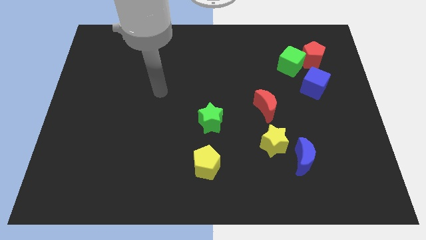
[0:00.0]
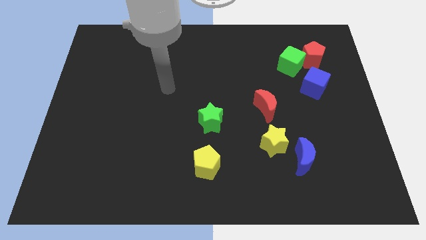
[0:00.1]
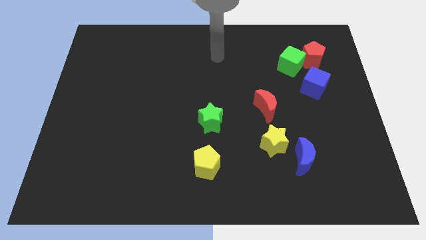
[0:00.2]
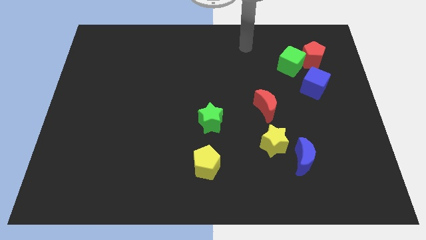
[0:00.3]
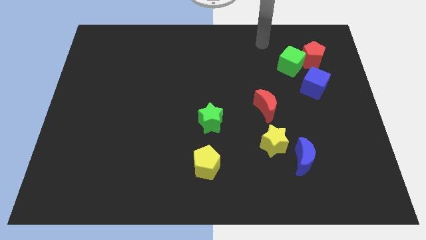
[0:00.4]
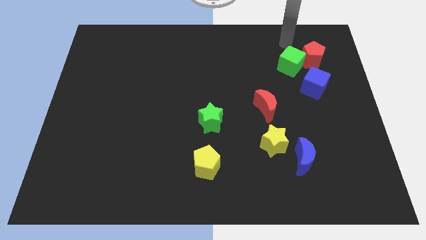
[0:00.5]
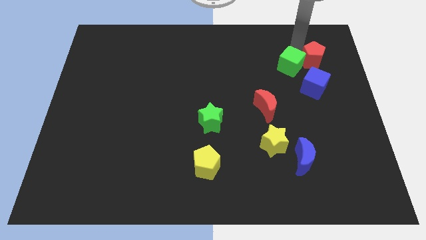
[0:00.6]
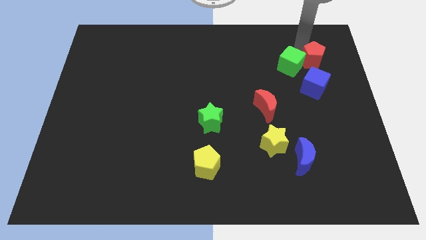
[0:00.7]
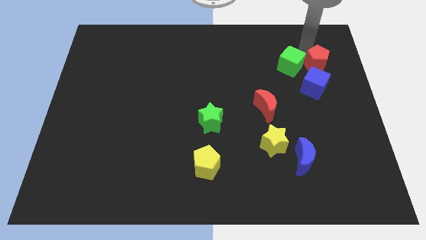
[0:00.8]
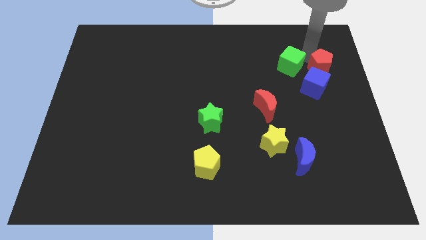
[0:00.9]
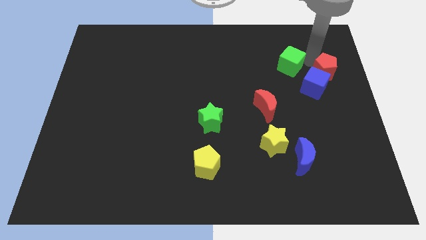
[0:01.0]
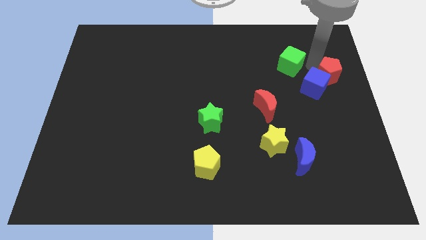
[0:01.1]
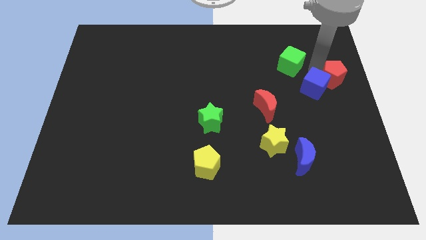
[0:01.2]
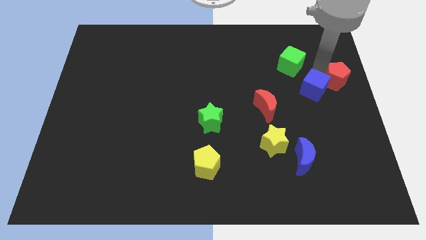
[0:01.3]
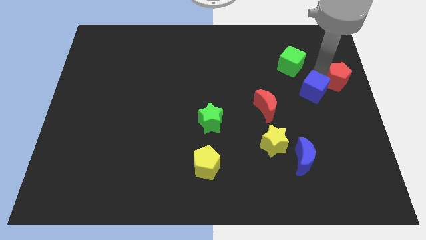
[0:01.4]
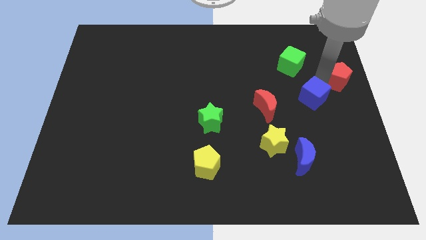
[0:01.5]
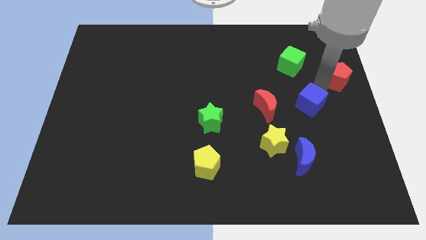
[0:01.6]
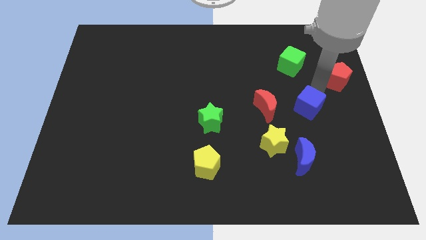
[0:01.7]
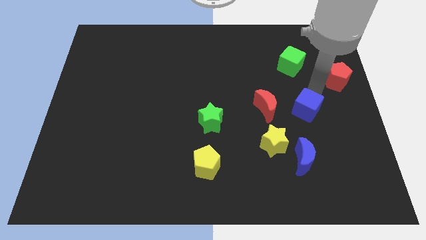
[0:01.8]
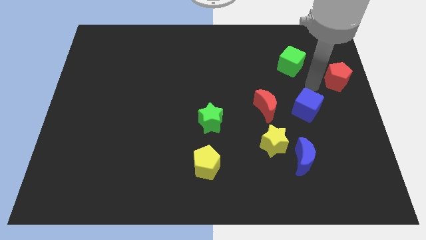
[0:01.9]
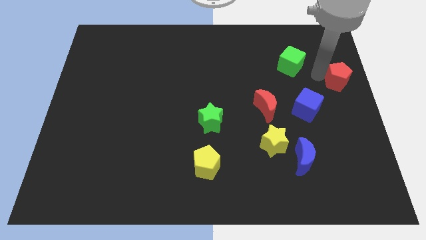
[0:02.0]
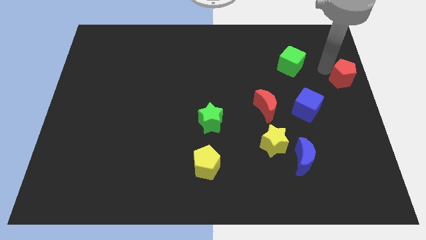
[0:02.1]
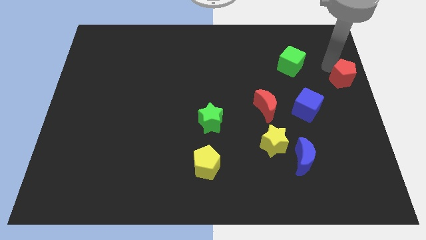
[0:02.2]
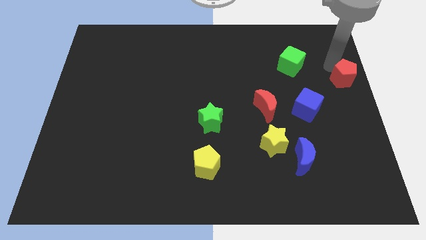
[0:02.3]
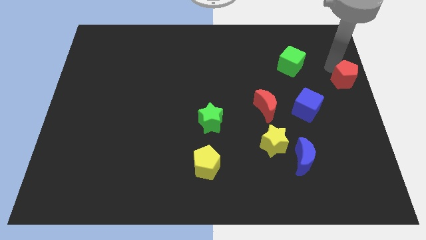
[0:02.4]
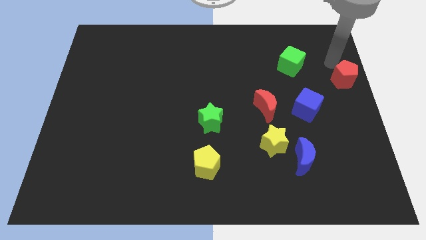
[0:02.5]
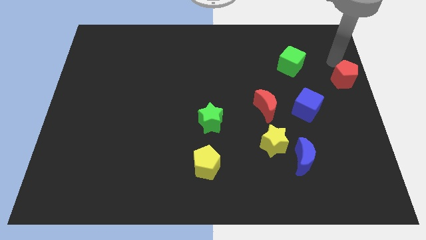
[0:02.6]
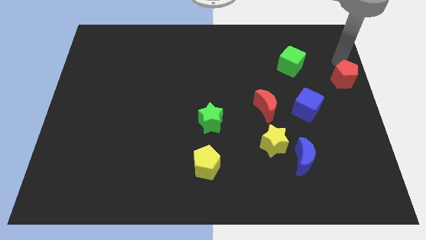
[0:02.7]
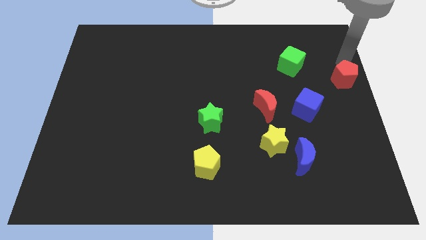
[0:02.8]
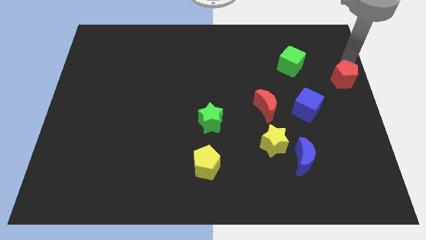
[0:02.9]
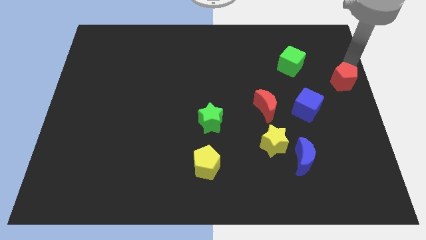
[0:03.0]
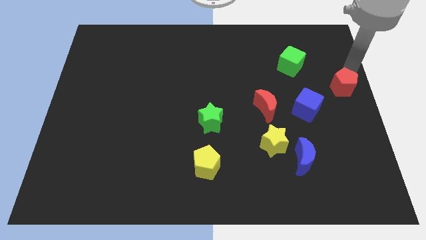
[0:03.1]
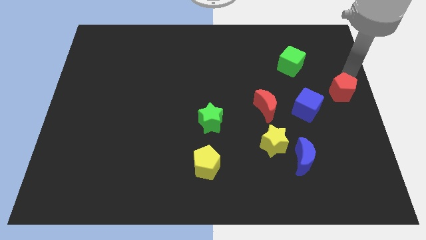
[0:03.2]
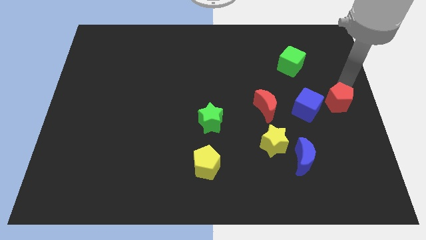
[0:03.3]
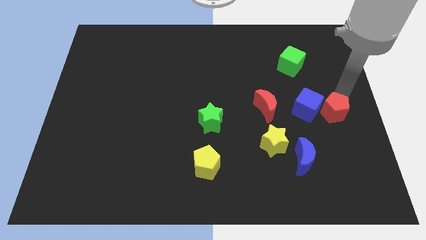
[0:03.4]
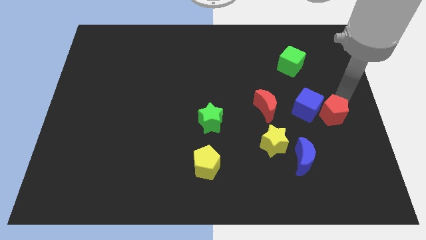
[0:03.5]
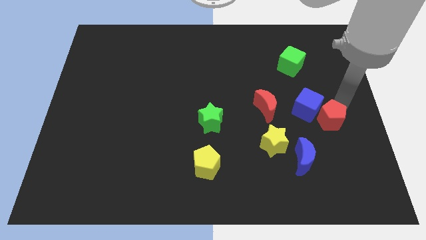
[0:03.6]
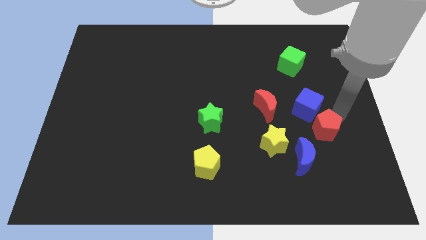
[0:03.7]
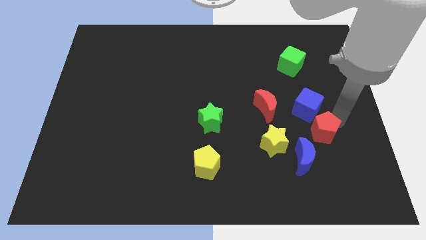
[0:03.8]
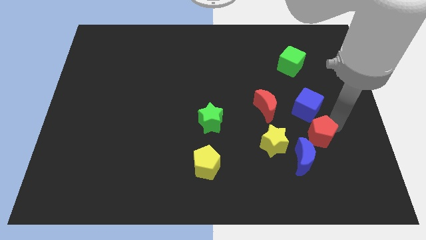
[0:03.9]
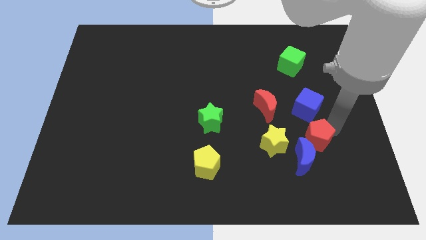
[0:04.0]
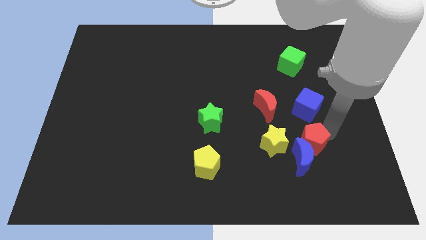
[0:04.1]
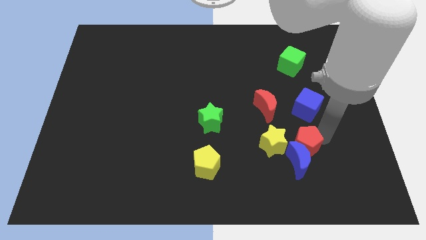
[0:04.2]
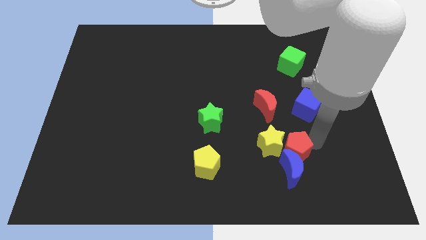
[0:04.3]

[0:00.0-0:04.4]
slide the red pentagon close to the blue moon

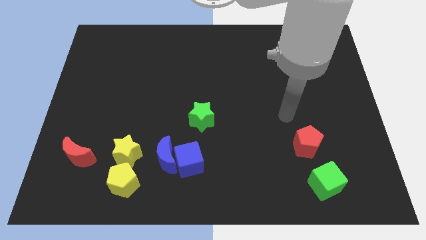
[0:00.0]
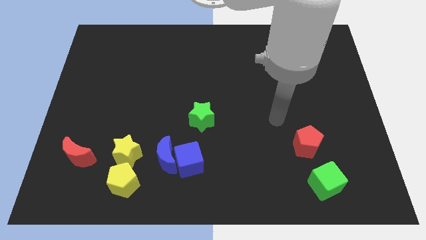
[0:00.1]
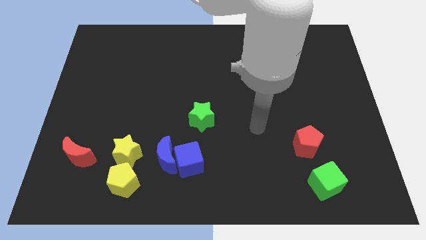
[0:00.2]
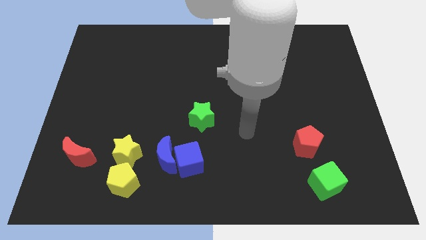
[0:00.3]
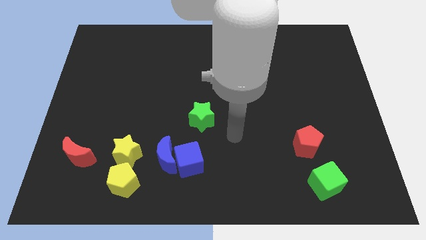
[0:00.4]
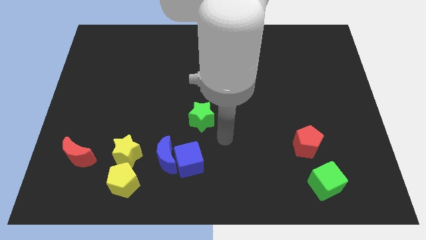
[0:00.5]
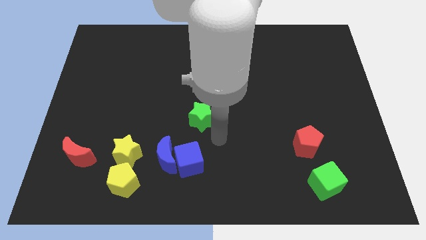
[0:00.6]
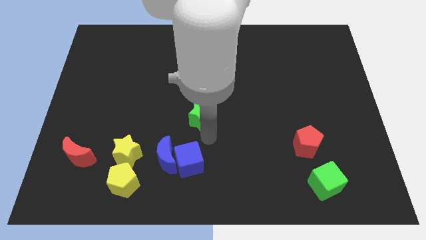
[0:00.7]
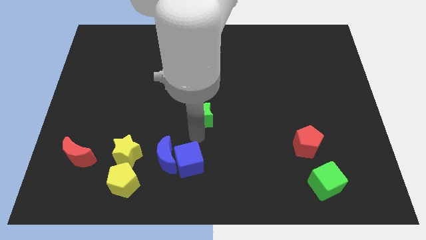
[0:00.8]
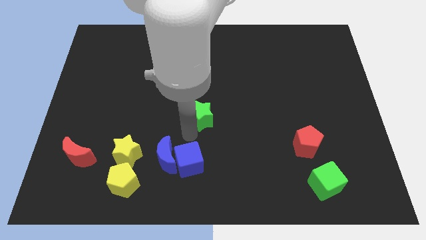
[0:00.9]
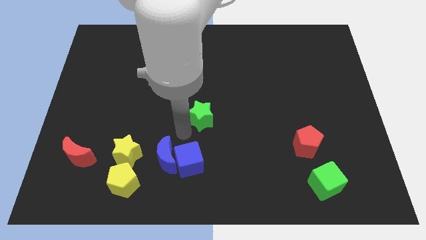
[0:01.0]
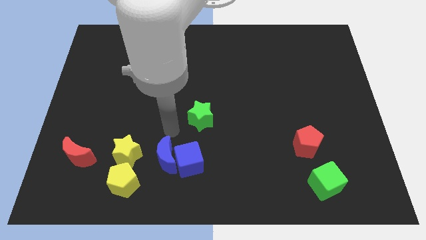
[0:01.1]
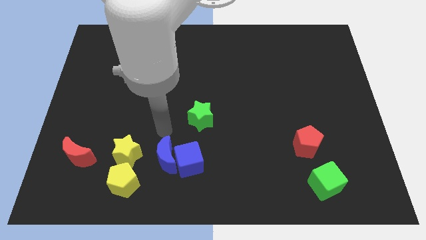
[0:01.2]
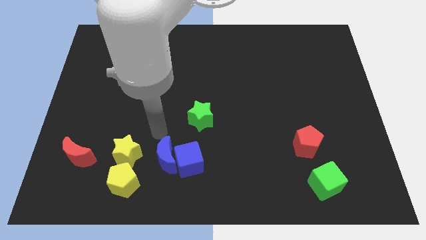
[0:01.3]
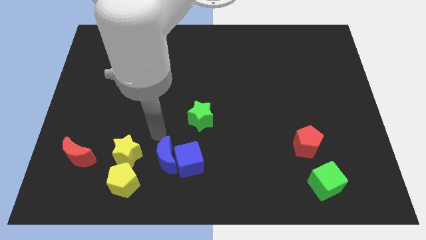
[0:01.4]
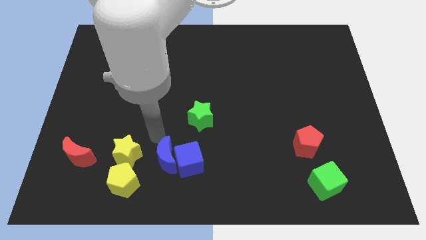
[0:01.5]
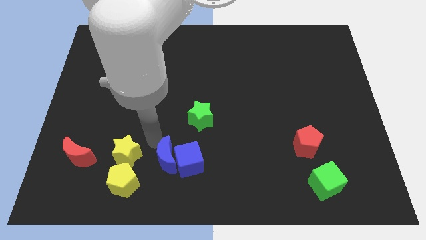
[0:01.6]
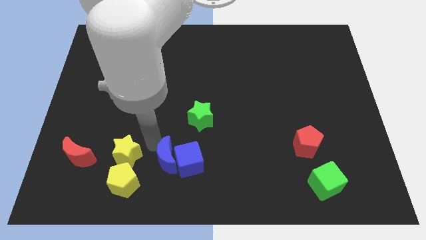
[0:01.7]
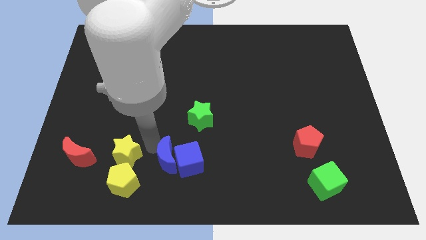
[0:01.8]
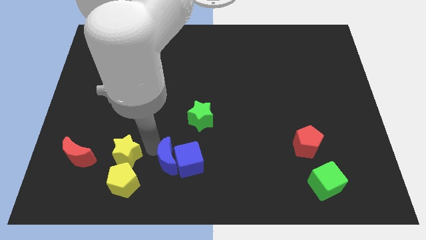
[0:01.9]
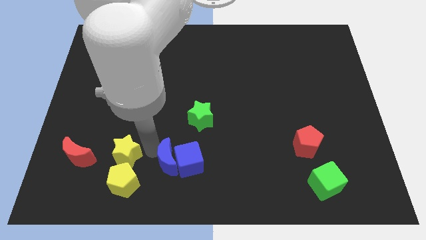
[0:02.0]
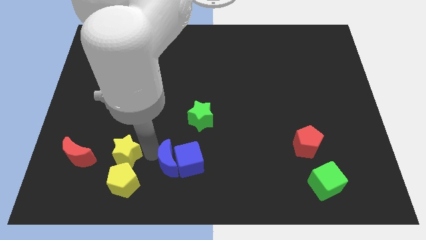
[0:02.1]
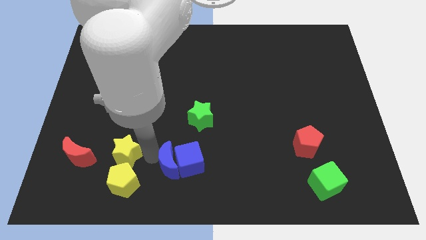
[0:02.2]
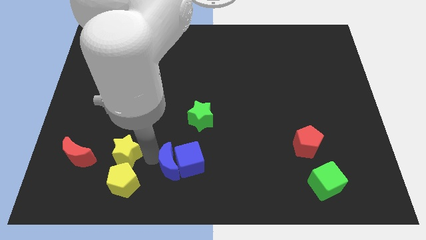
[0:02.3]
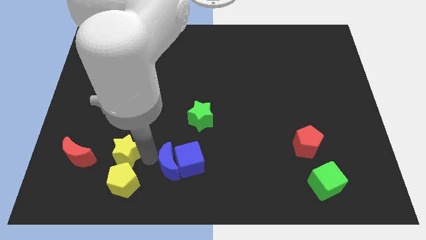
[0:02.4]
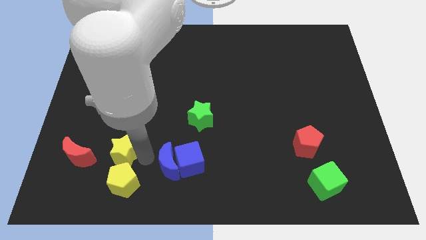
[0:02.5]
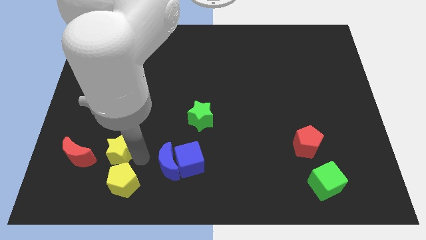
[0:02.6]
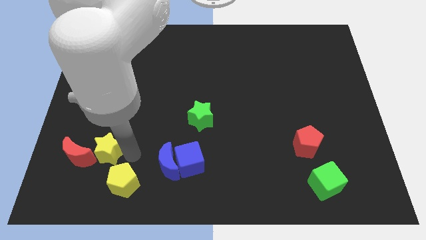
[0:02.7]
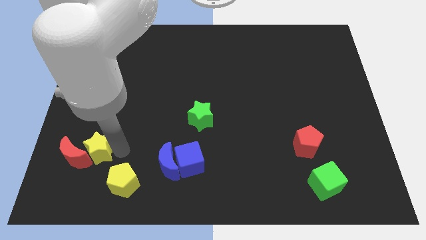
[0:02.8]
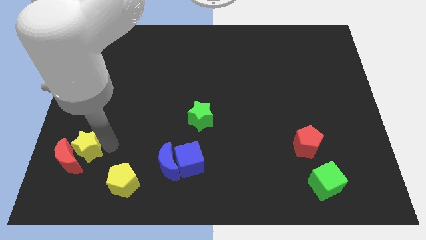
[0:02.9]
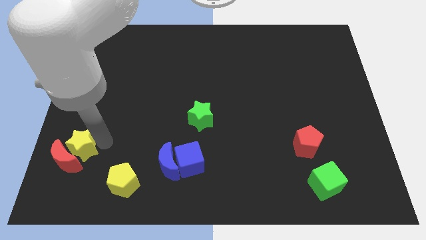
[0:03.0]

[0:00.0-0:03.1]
push the yellow star to the red moon

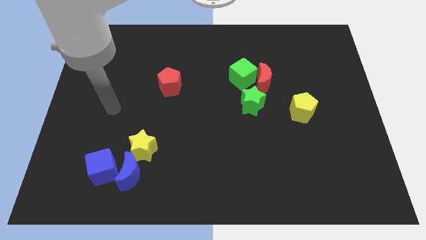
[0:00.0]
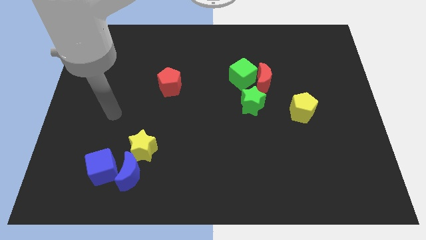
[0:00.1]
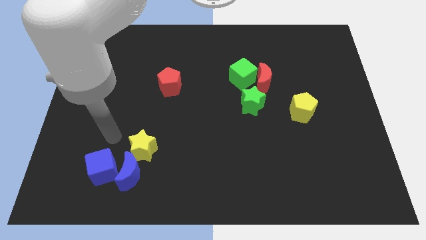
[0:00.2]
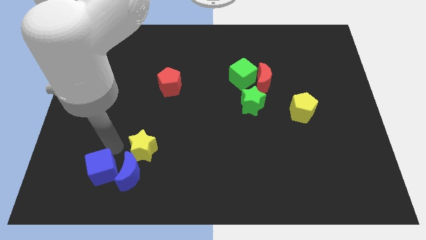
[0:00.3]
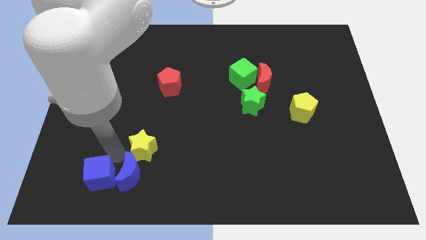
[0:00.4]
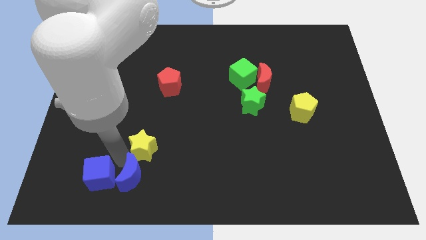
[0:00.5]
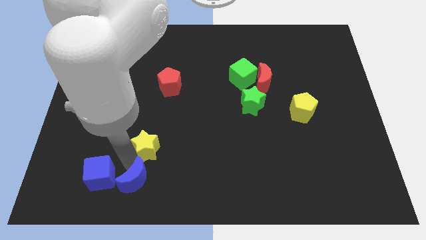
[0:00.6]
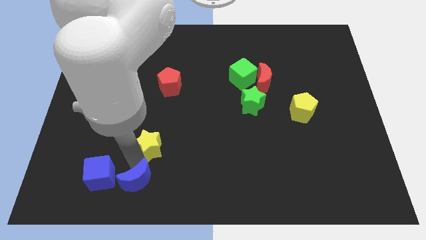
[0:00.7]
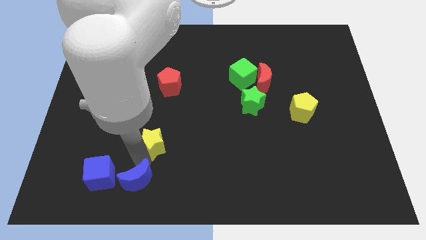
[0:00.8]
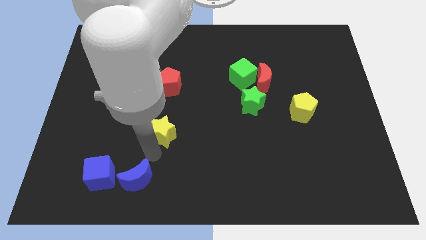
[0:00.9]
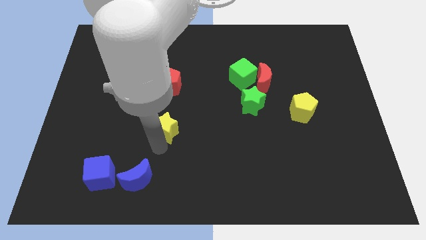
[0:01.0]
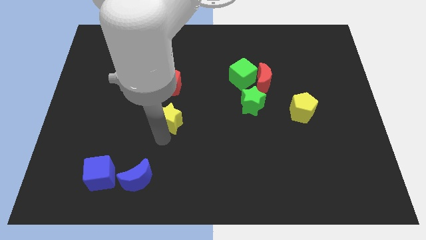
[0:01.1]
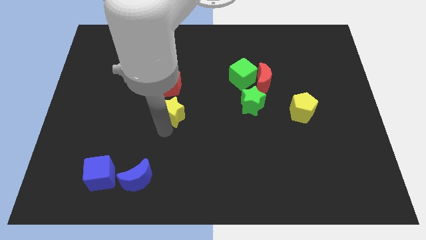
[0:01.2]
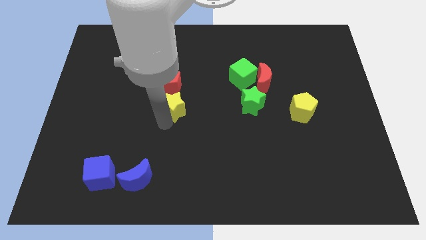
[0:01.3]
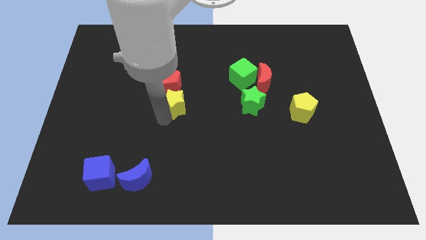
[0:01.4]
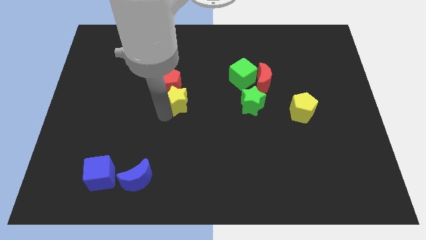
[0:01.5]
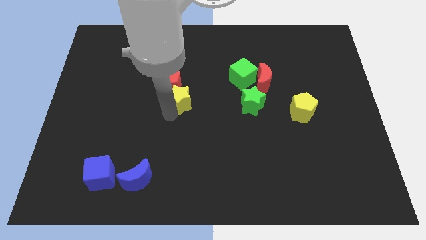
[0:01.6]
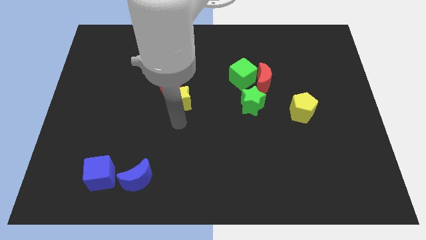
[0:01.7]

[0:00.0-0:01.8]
put the yellow star towards the red pentagon
